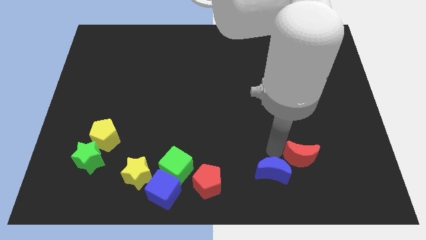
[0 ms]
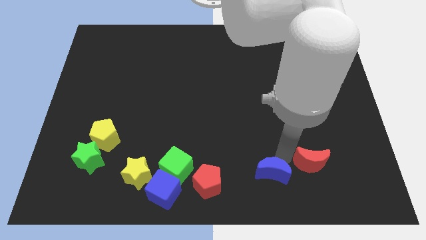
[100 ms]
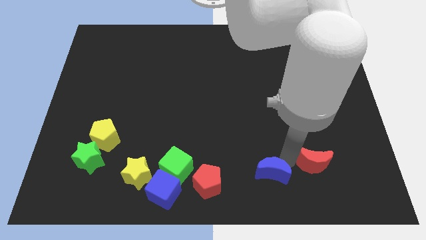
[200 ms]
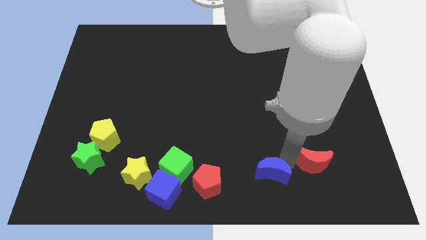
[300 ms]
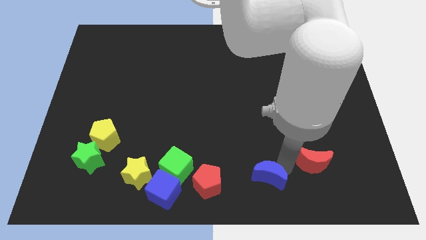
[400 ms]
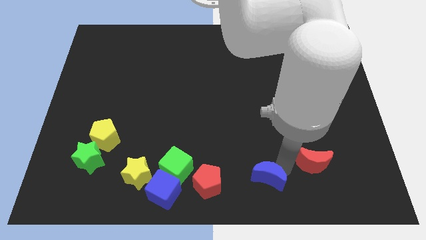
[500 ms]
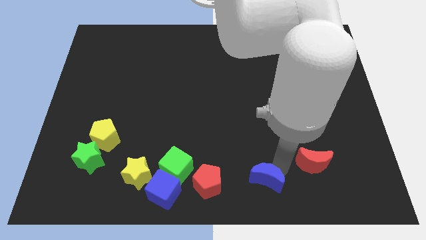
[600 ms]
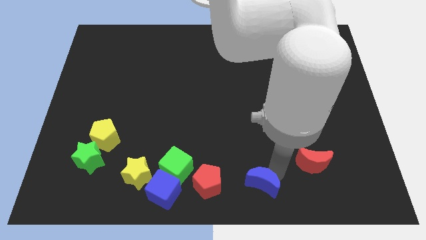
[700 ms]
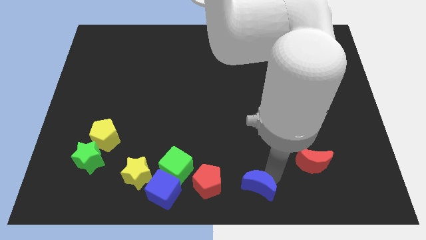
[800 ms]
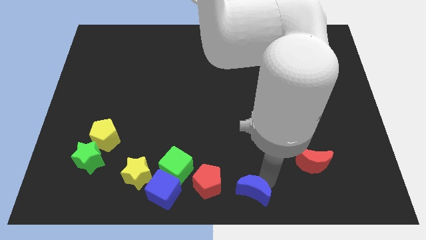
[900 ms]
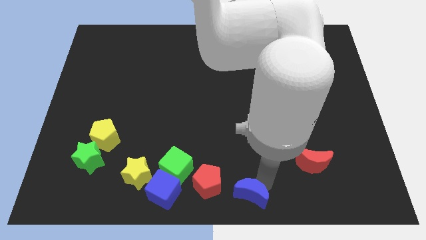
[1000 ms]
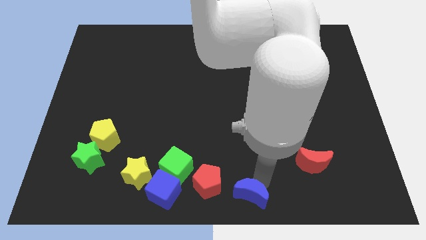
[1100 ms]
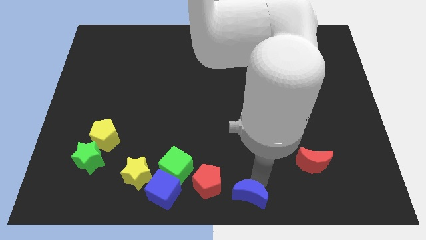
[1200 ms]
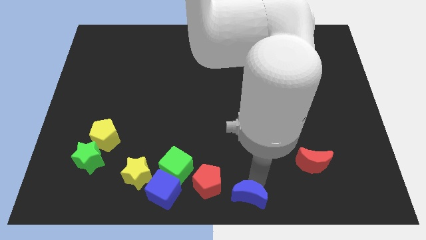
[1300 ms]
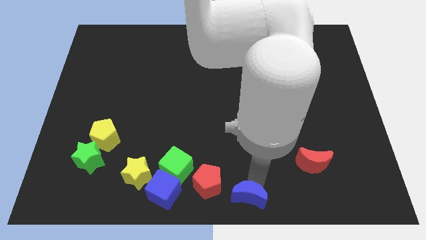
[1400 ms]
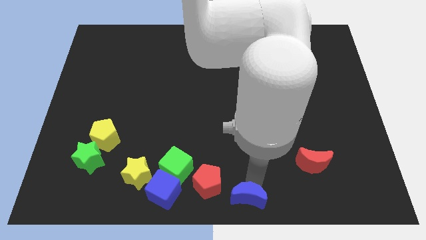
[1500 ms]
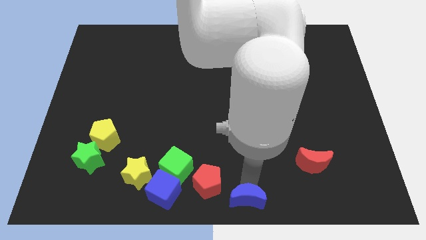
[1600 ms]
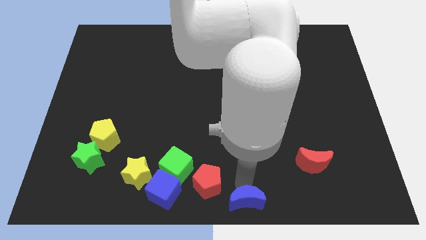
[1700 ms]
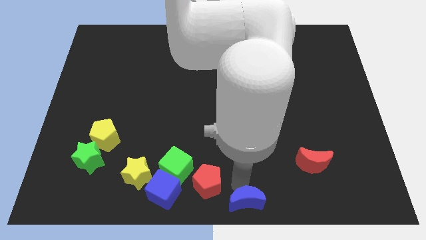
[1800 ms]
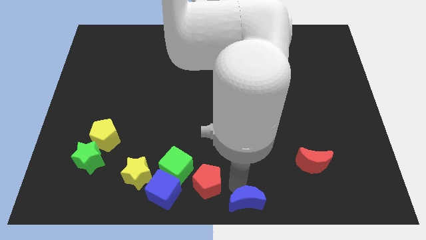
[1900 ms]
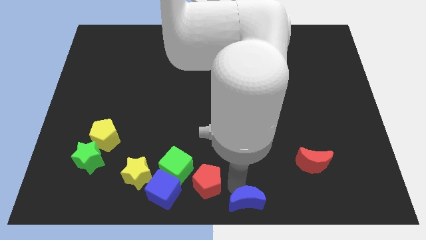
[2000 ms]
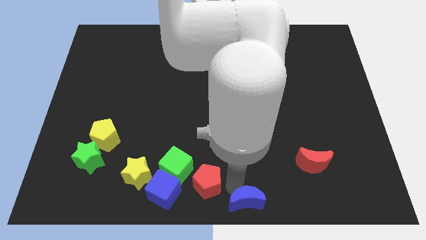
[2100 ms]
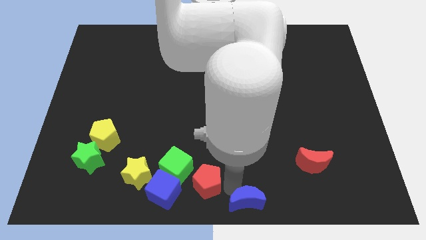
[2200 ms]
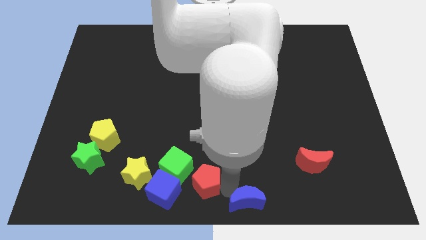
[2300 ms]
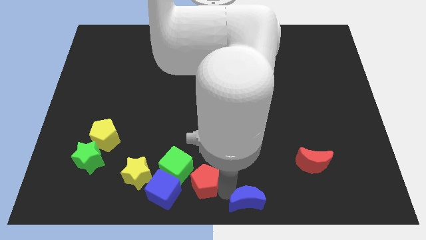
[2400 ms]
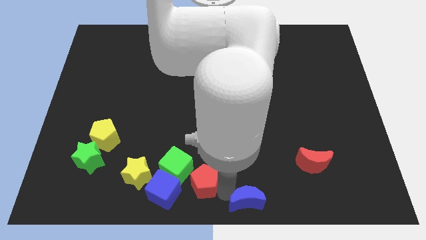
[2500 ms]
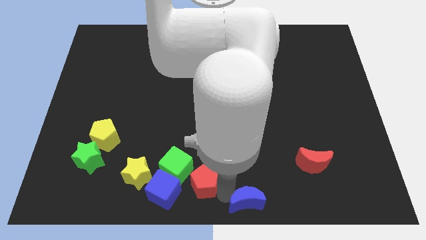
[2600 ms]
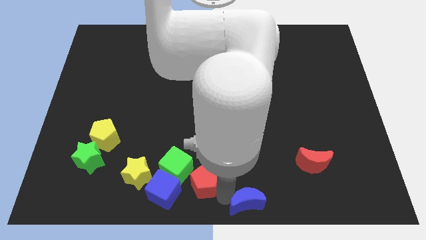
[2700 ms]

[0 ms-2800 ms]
push the blue moon to the bottom center

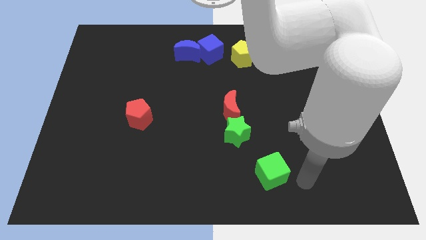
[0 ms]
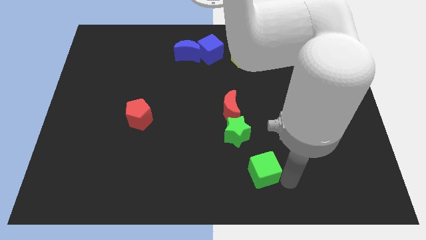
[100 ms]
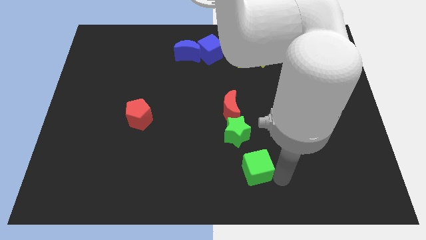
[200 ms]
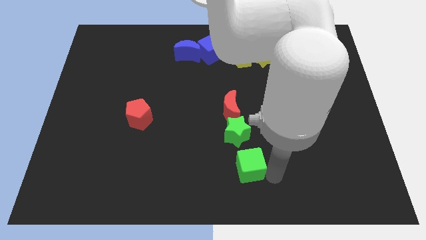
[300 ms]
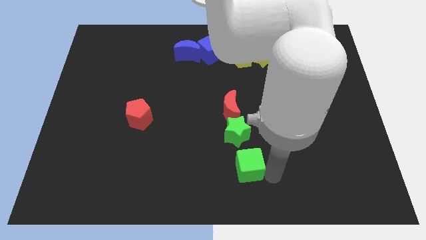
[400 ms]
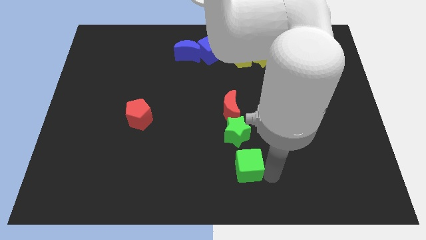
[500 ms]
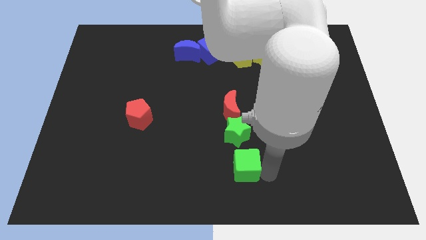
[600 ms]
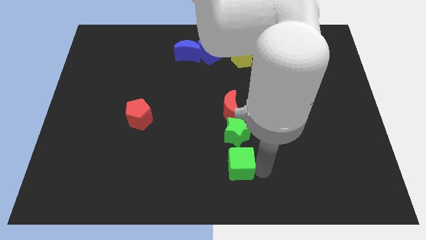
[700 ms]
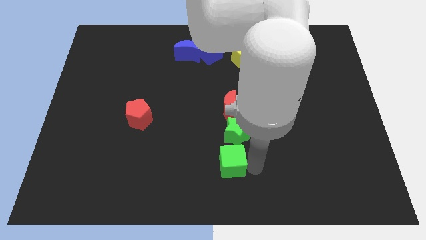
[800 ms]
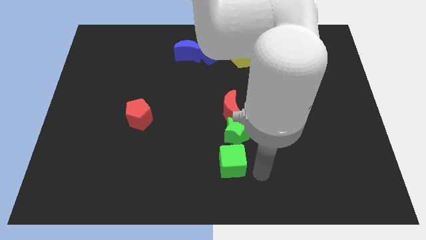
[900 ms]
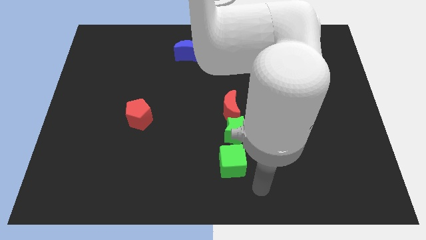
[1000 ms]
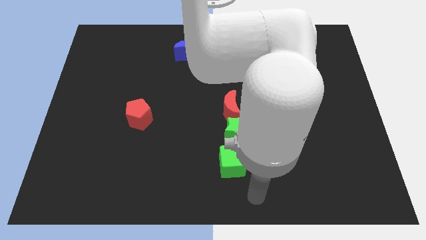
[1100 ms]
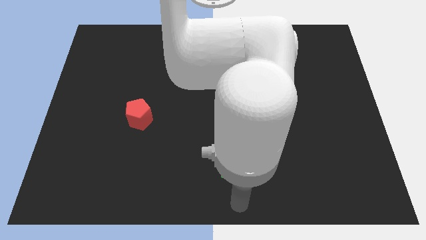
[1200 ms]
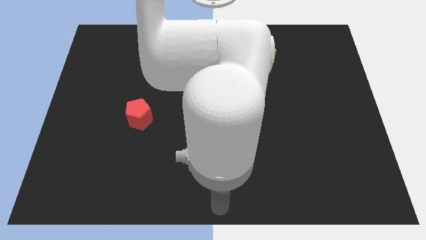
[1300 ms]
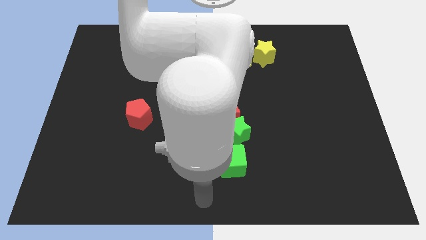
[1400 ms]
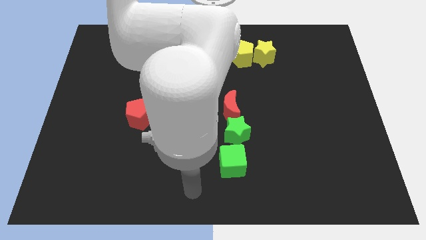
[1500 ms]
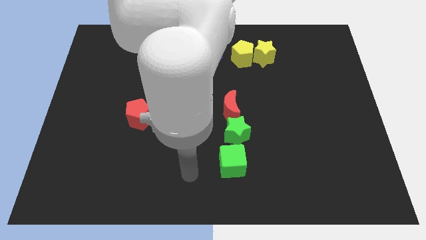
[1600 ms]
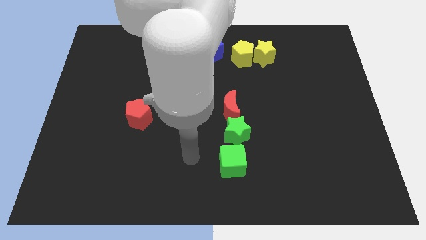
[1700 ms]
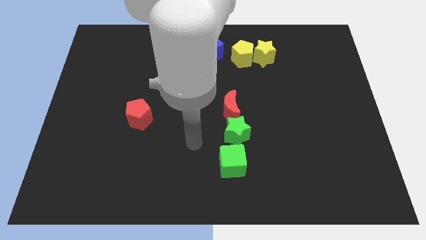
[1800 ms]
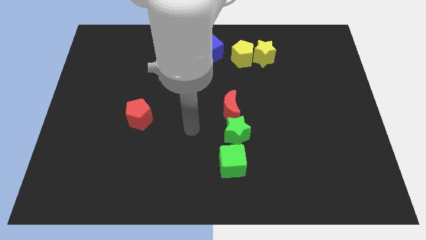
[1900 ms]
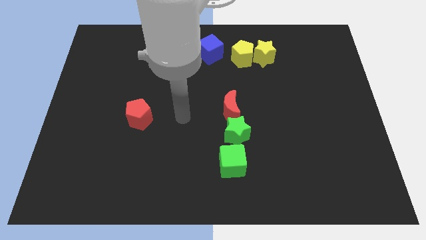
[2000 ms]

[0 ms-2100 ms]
push the green cube below the green star

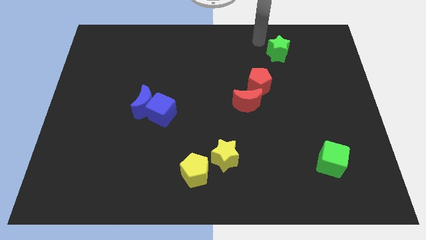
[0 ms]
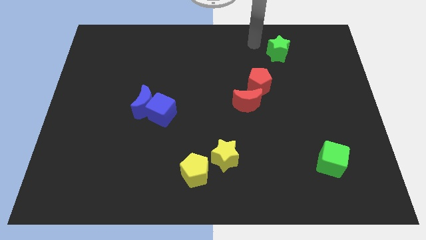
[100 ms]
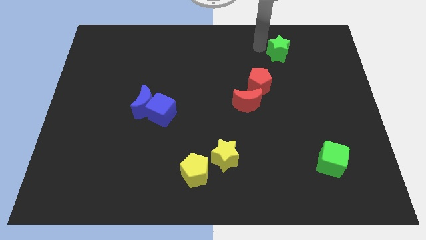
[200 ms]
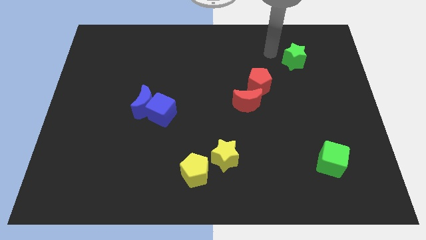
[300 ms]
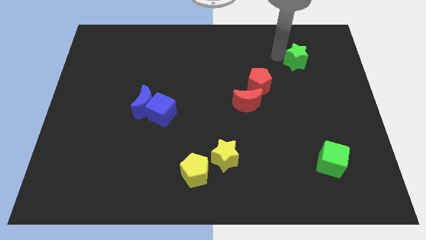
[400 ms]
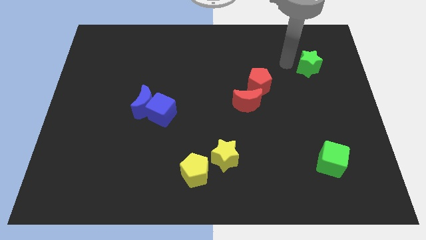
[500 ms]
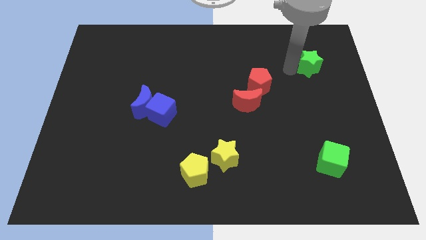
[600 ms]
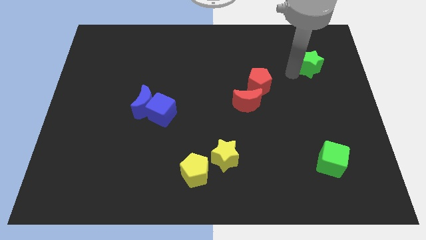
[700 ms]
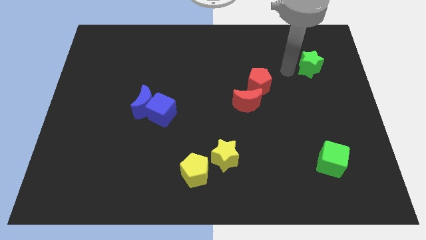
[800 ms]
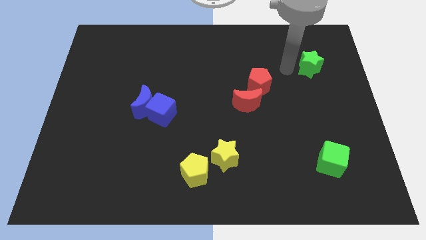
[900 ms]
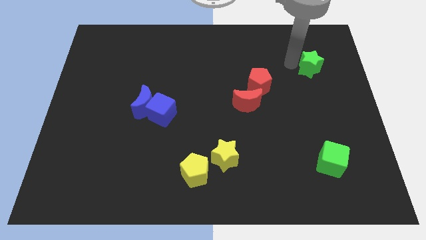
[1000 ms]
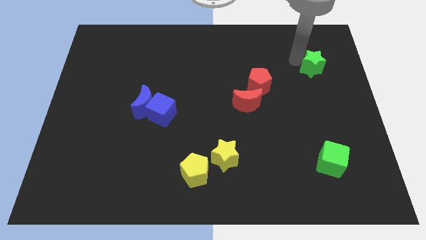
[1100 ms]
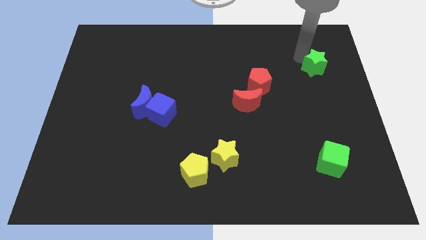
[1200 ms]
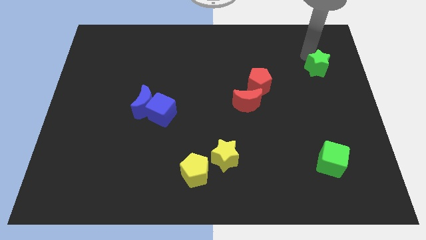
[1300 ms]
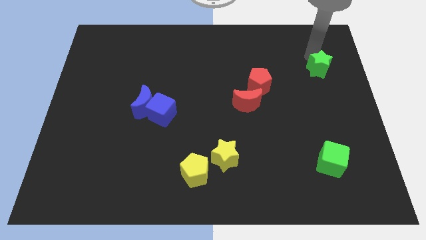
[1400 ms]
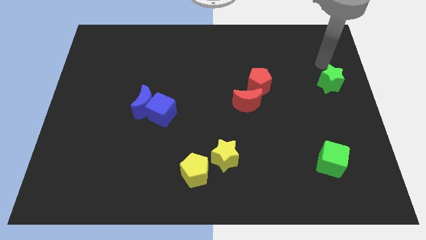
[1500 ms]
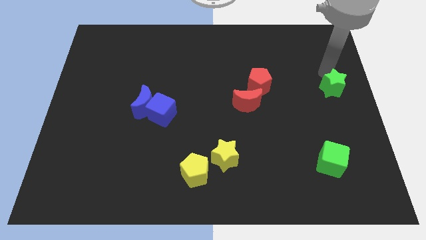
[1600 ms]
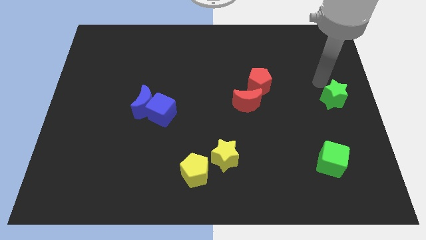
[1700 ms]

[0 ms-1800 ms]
move the green star towards the bottom side of the board

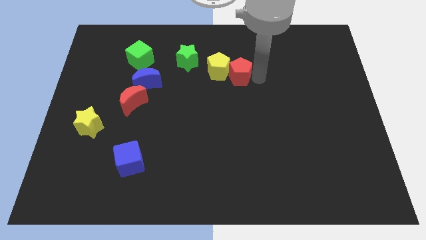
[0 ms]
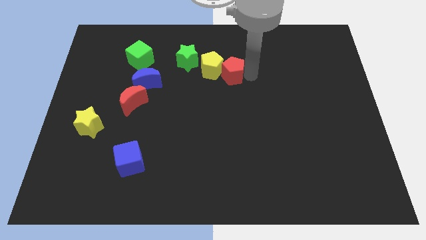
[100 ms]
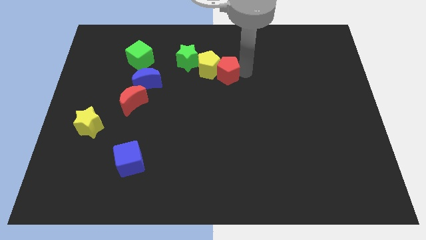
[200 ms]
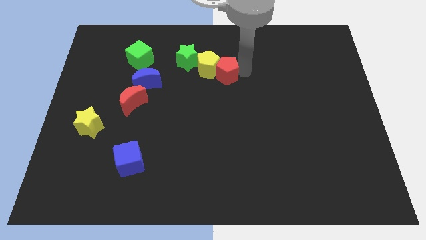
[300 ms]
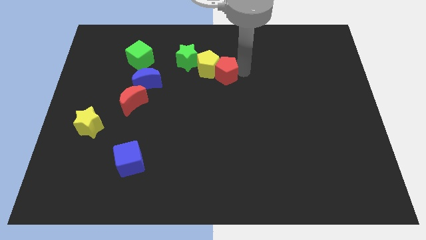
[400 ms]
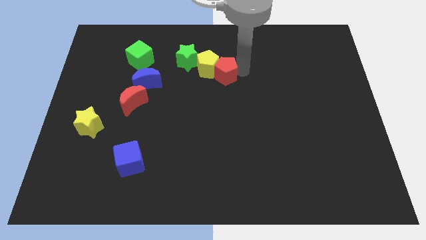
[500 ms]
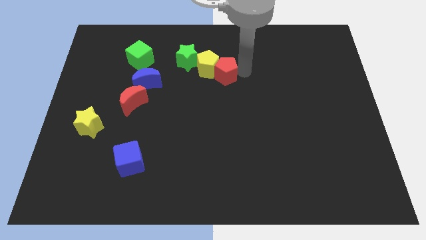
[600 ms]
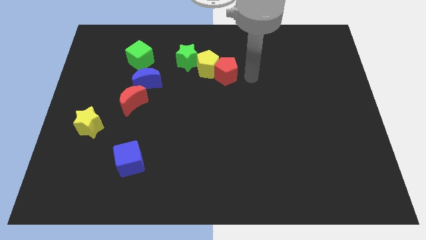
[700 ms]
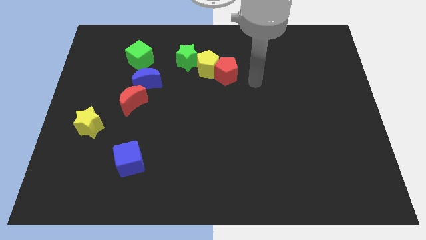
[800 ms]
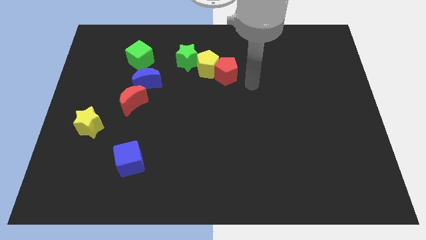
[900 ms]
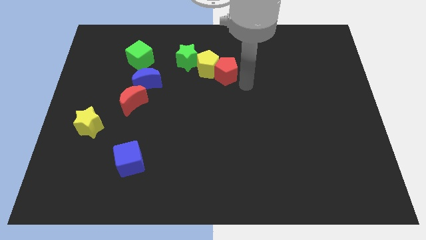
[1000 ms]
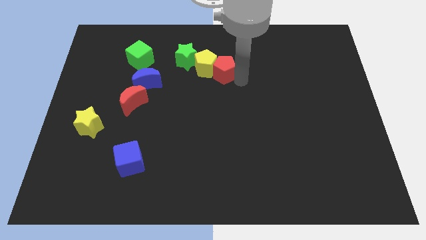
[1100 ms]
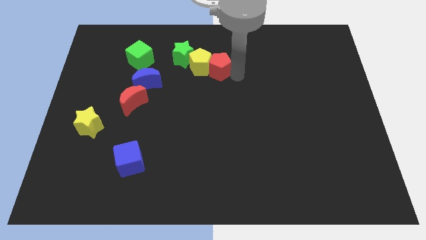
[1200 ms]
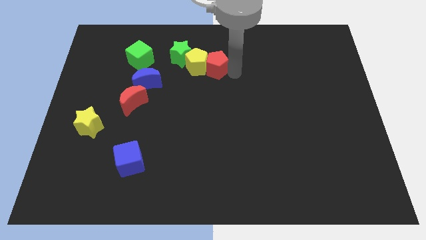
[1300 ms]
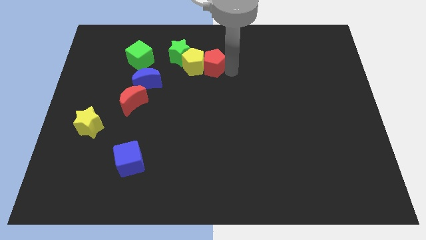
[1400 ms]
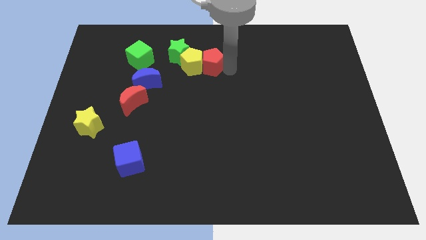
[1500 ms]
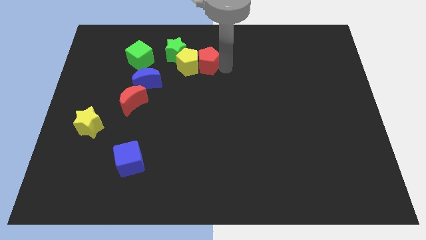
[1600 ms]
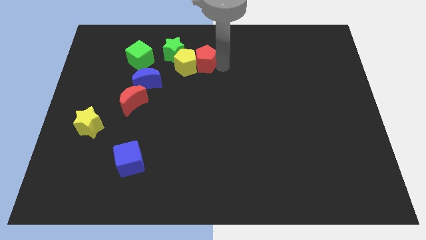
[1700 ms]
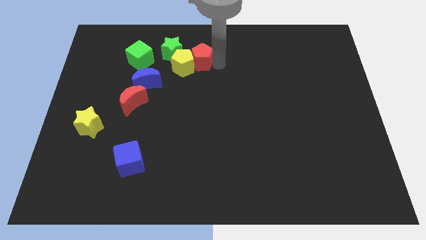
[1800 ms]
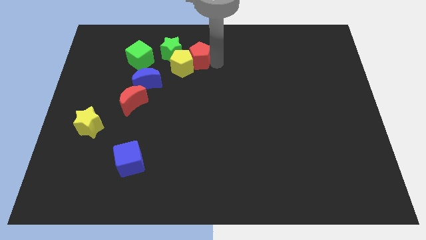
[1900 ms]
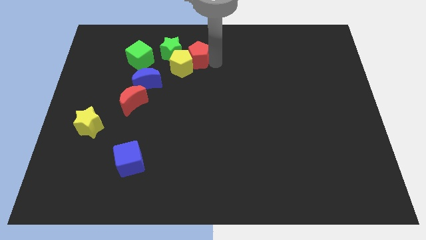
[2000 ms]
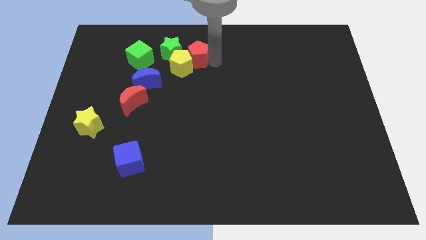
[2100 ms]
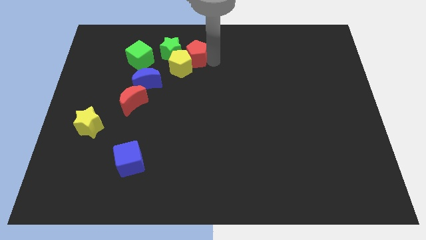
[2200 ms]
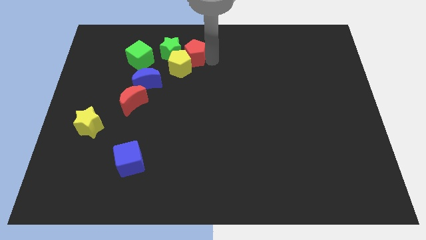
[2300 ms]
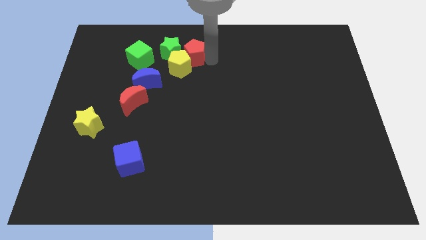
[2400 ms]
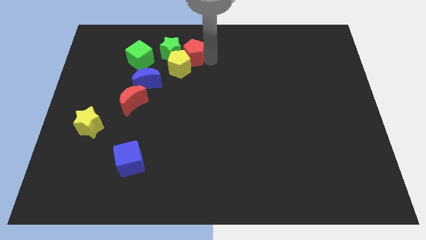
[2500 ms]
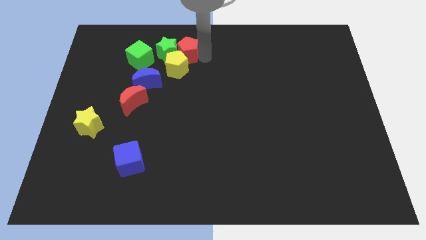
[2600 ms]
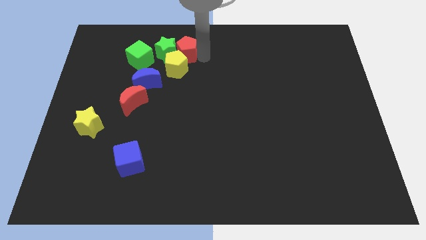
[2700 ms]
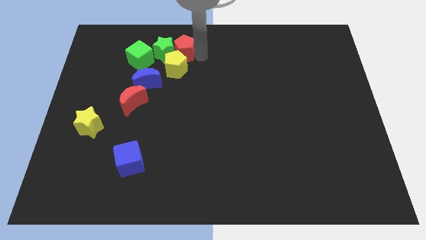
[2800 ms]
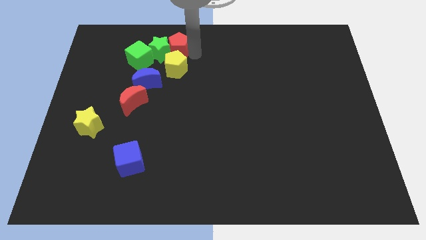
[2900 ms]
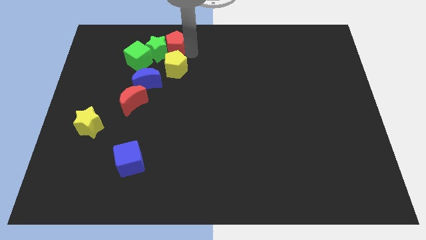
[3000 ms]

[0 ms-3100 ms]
form a triangle out of green star red and the yellow pentagon
